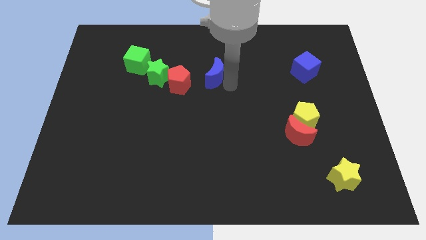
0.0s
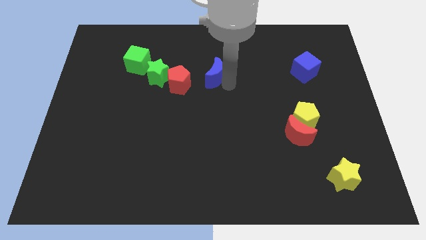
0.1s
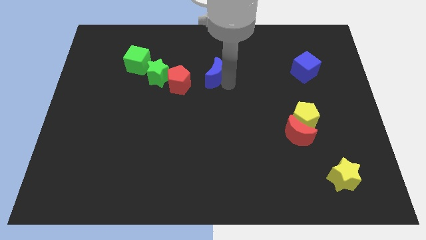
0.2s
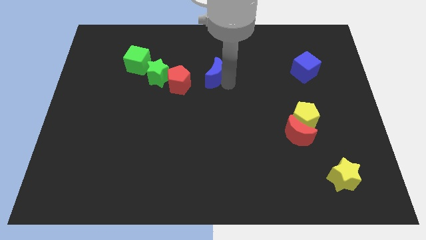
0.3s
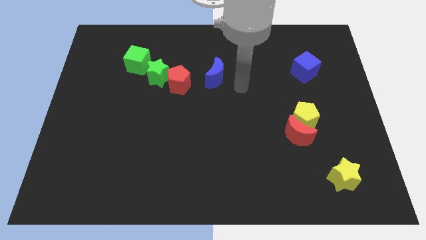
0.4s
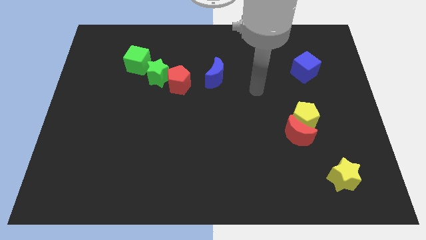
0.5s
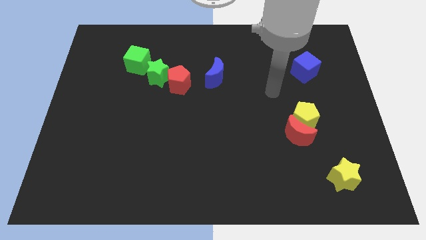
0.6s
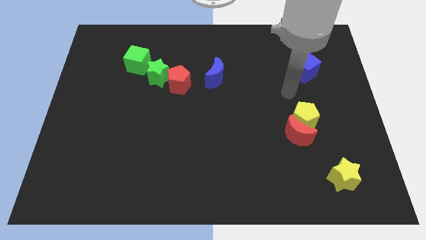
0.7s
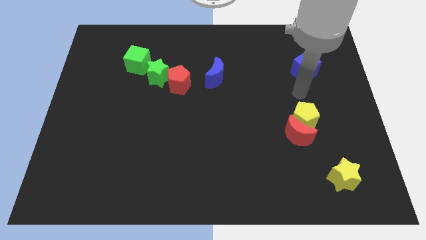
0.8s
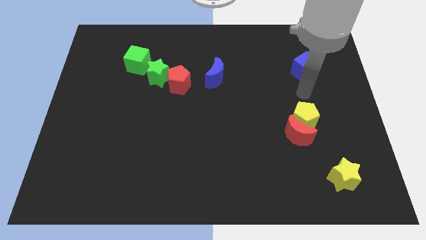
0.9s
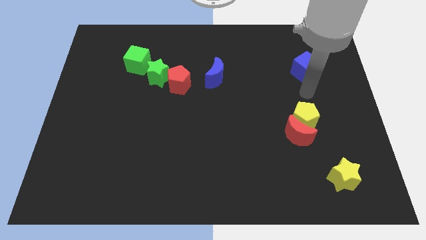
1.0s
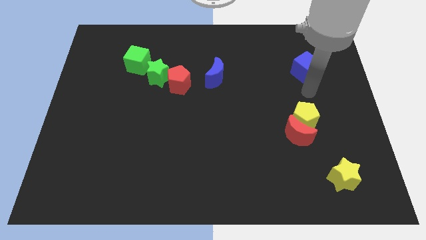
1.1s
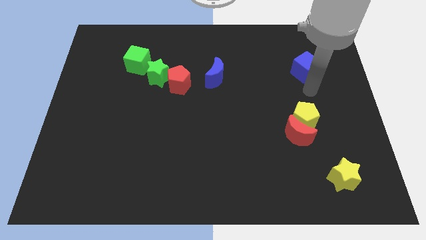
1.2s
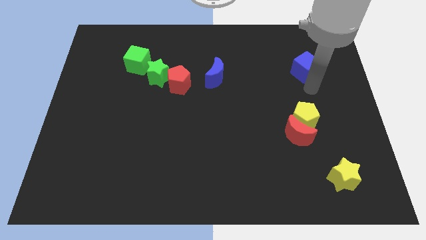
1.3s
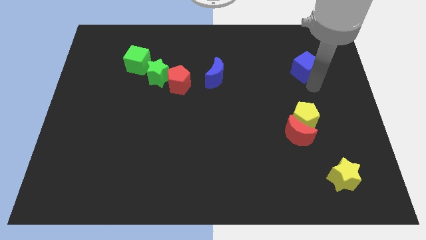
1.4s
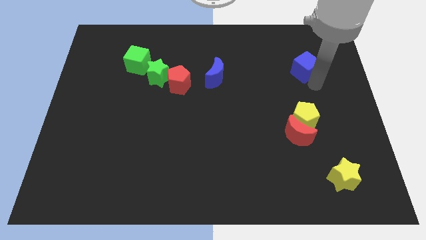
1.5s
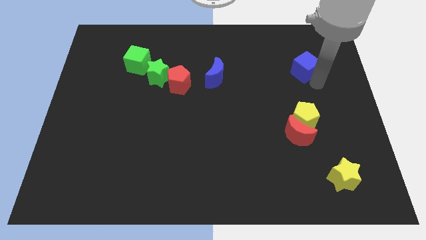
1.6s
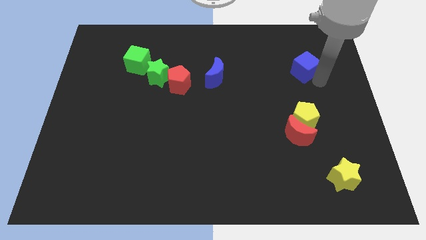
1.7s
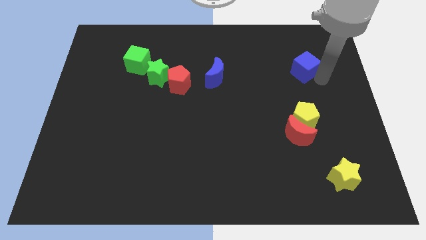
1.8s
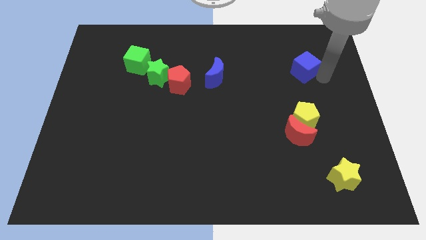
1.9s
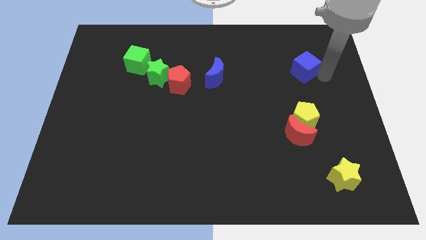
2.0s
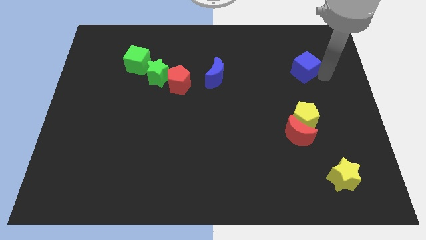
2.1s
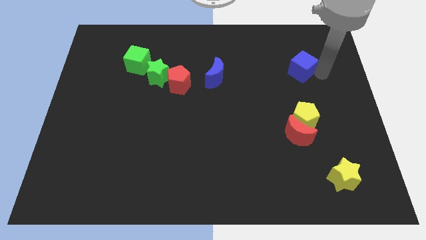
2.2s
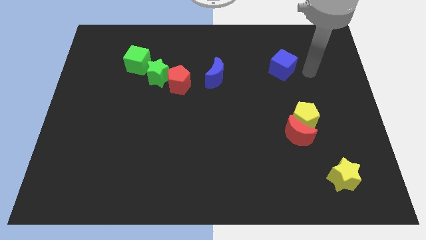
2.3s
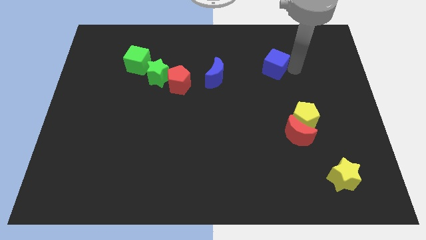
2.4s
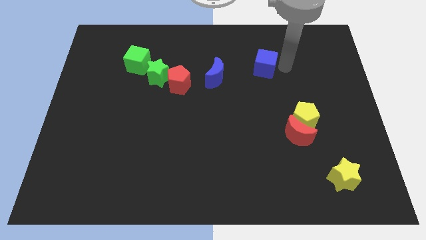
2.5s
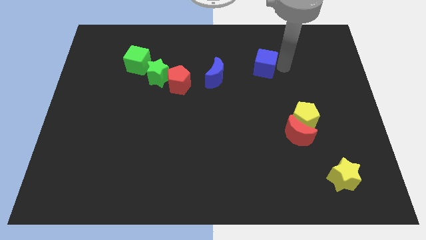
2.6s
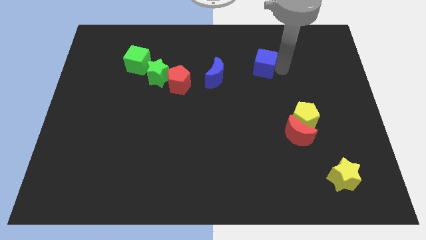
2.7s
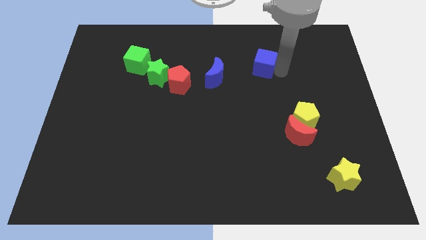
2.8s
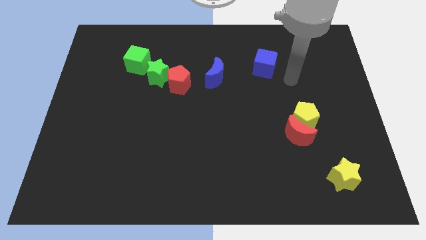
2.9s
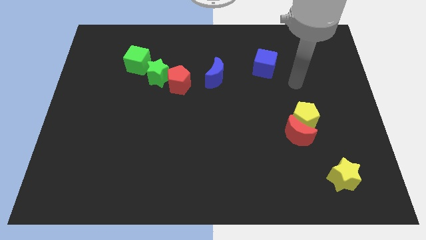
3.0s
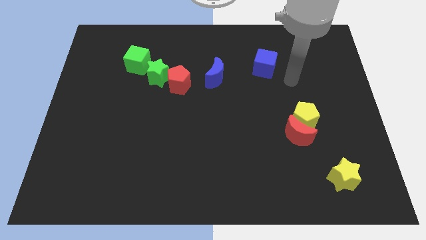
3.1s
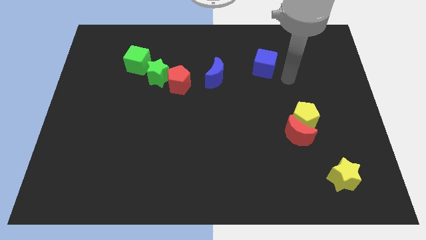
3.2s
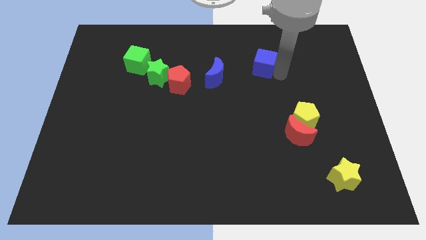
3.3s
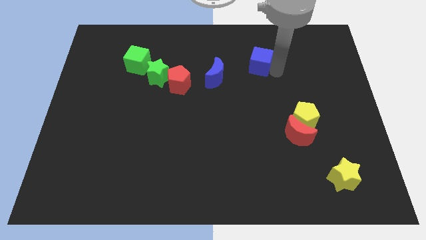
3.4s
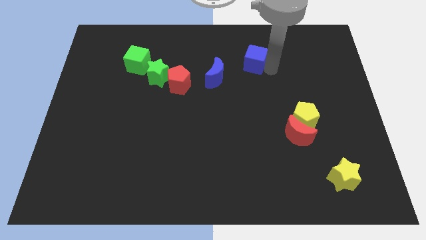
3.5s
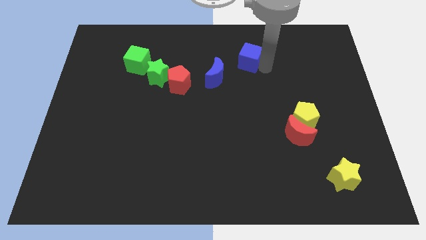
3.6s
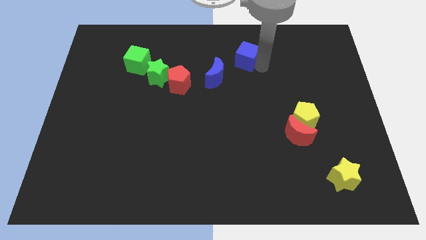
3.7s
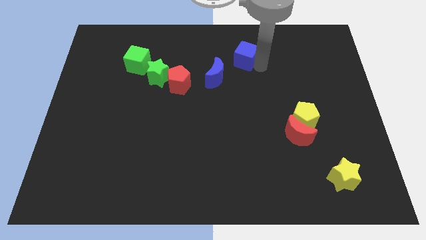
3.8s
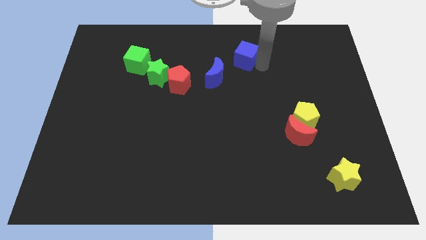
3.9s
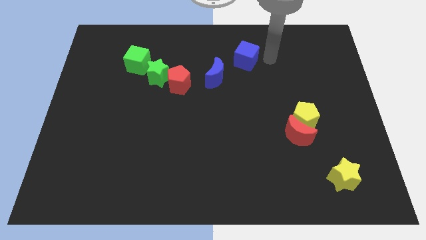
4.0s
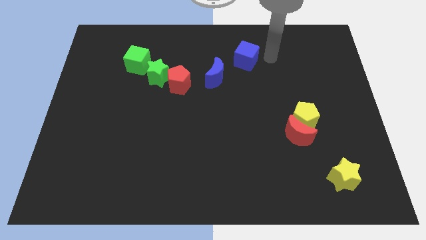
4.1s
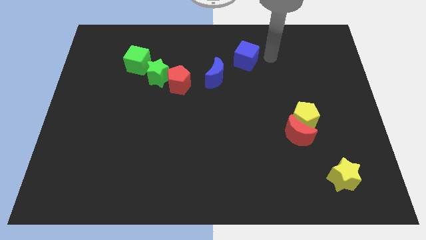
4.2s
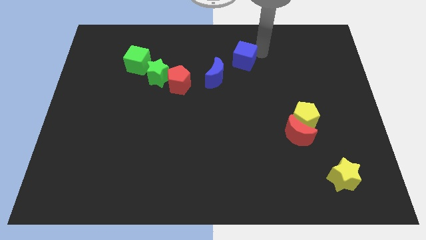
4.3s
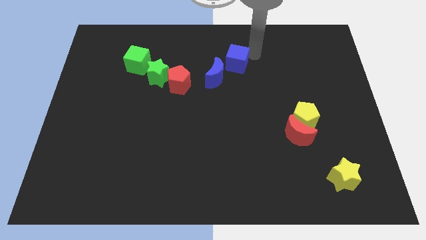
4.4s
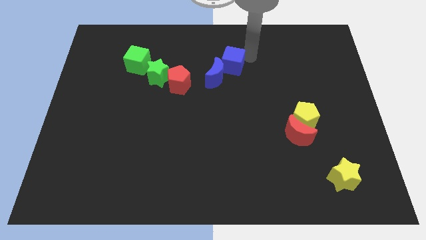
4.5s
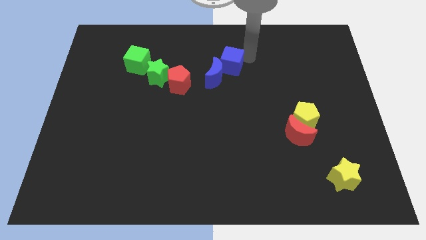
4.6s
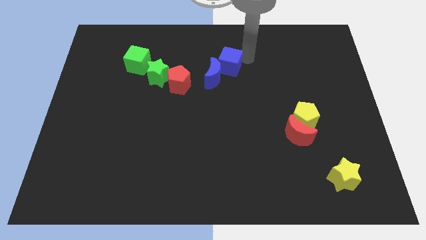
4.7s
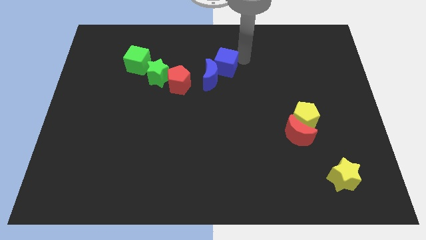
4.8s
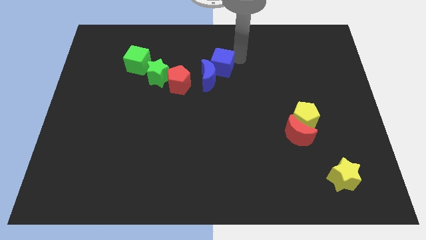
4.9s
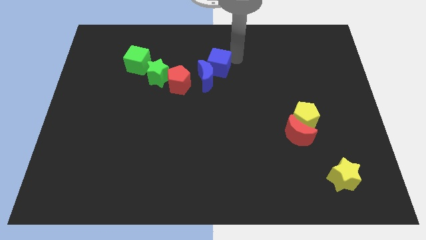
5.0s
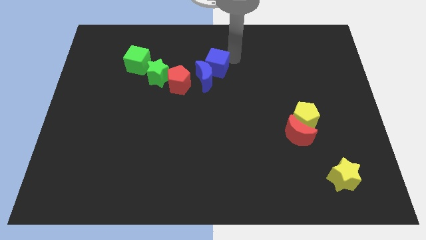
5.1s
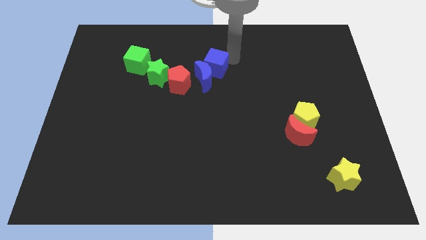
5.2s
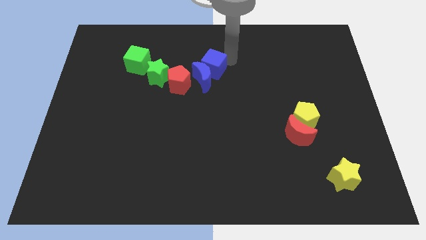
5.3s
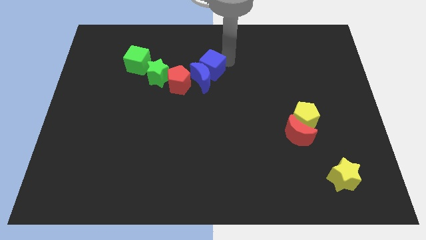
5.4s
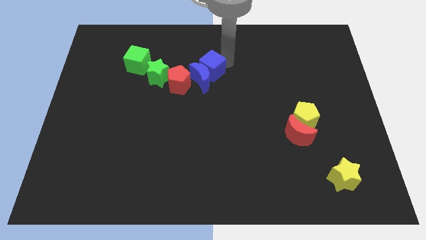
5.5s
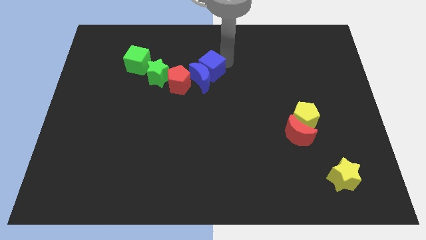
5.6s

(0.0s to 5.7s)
move blue cube to the top of blue crescent

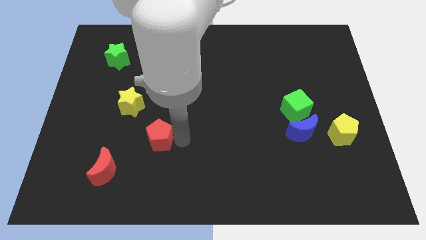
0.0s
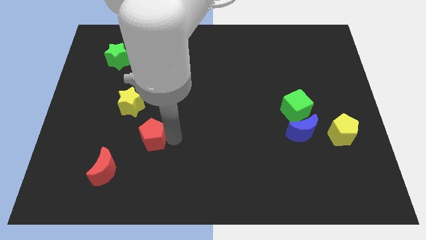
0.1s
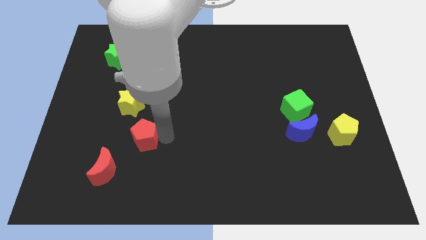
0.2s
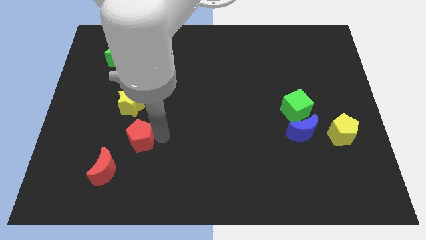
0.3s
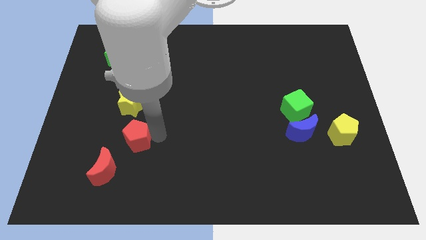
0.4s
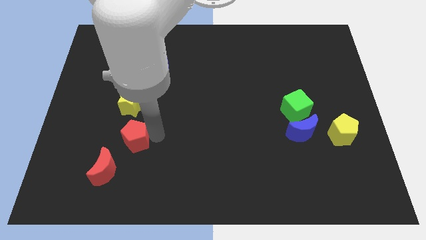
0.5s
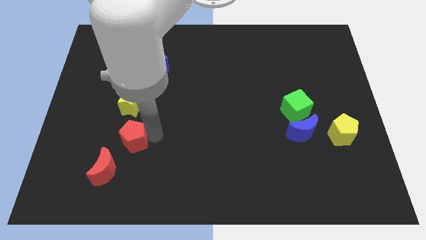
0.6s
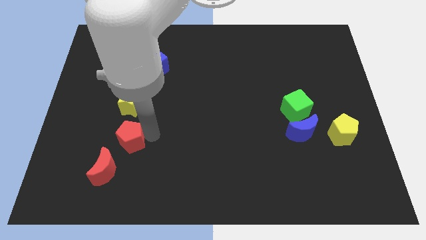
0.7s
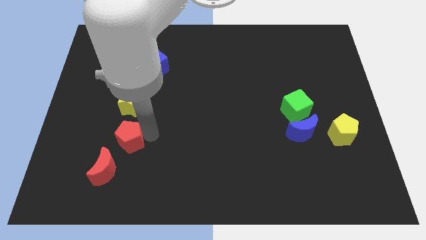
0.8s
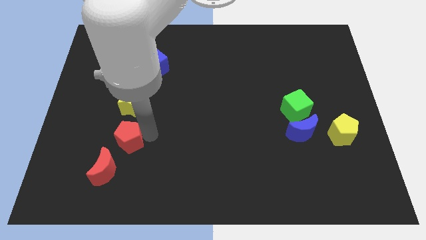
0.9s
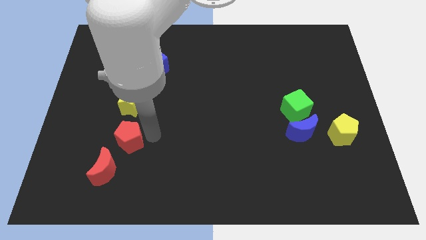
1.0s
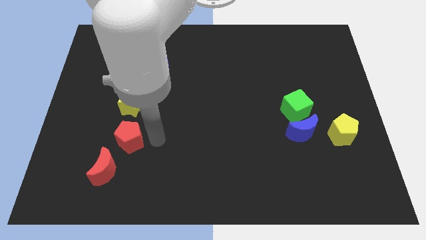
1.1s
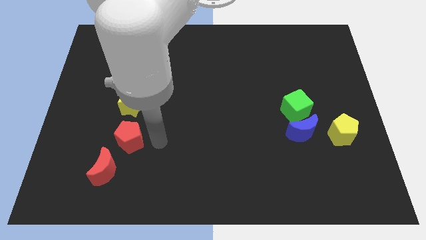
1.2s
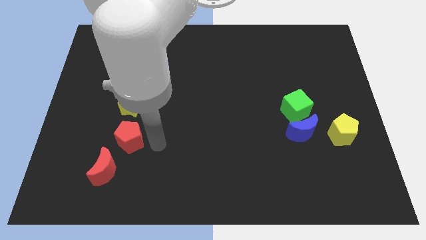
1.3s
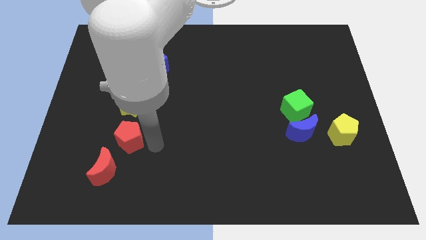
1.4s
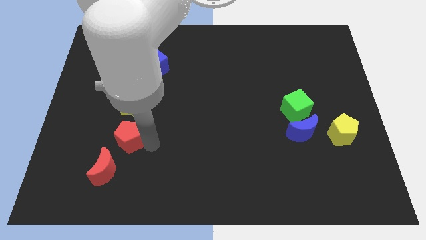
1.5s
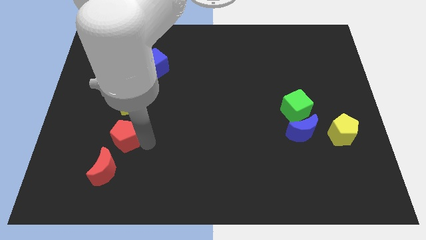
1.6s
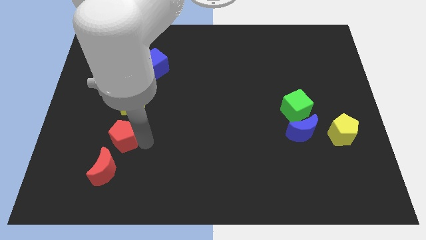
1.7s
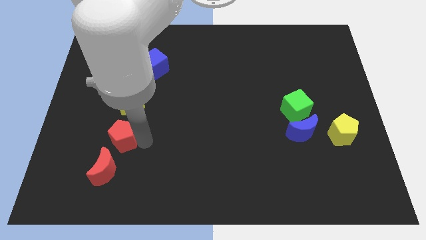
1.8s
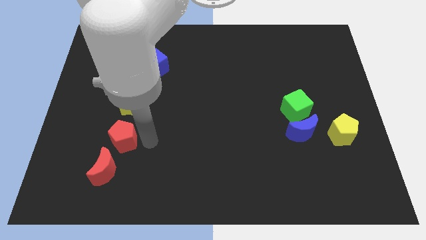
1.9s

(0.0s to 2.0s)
push the red pentagon underneath to the yellow star

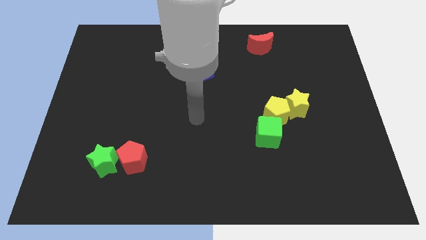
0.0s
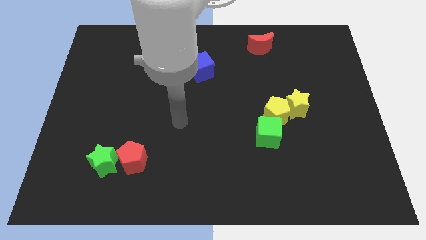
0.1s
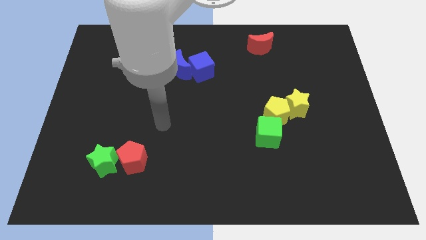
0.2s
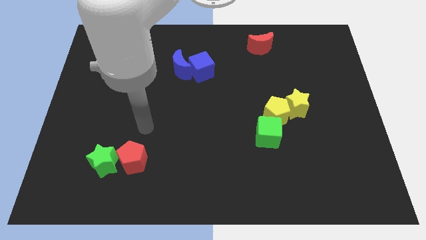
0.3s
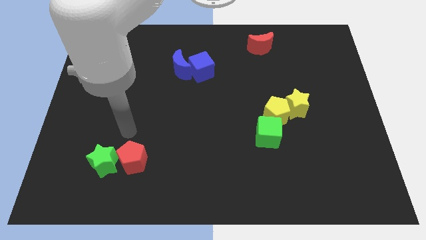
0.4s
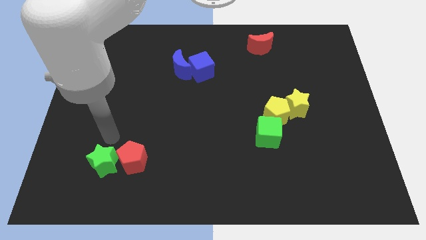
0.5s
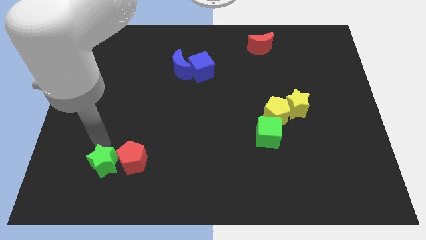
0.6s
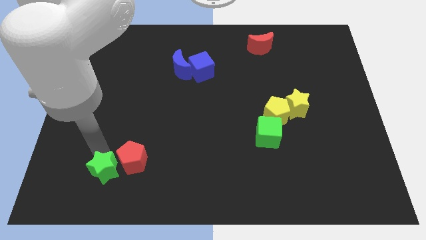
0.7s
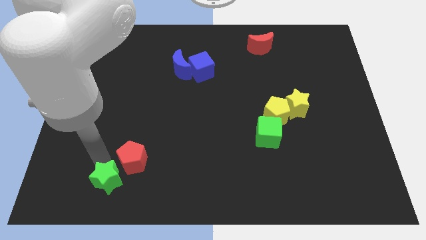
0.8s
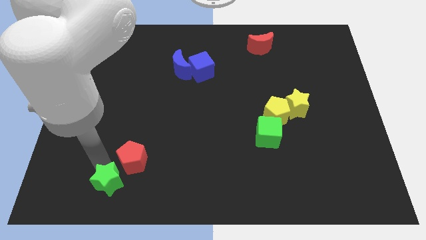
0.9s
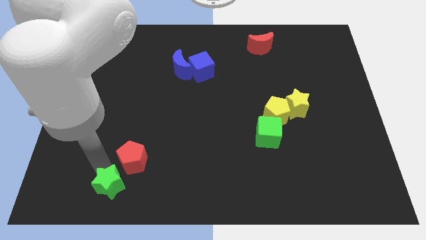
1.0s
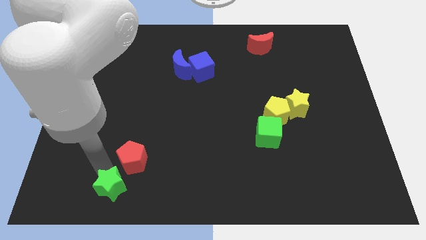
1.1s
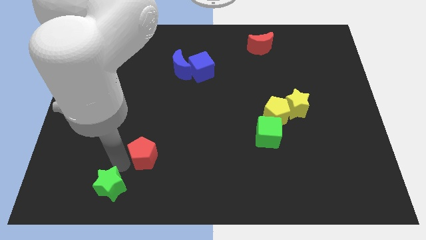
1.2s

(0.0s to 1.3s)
separate the green star from the red pentagon

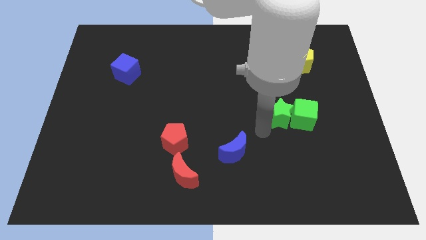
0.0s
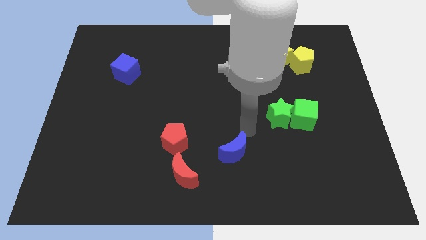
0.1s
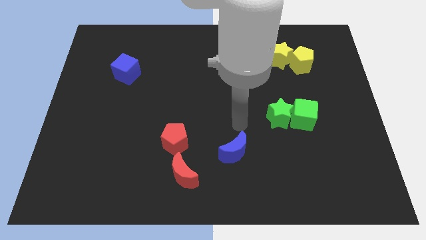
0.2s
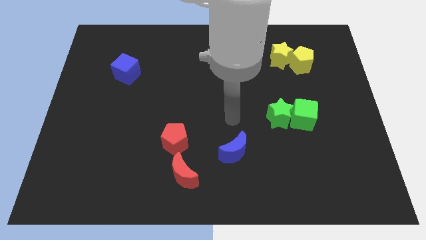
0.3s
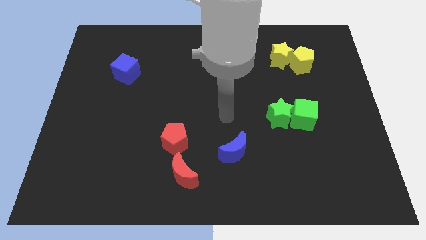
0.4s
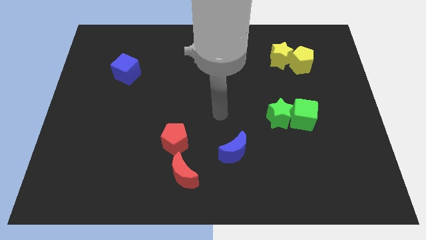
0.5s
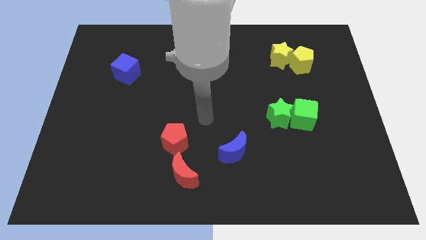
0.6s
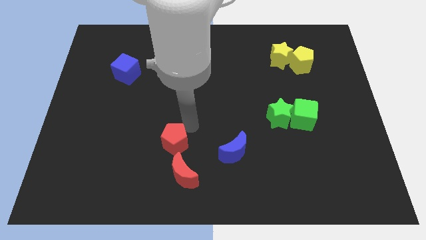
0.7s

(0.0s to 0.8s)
move arm near red pentagon
